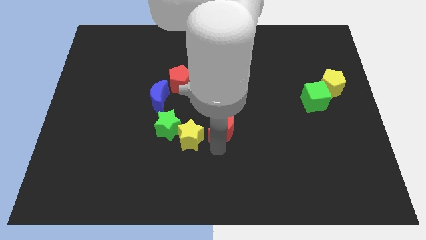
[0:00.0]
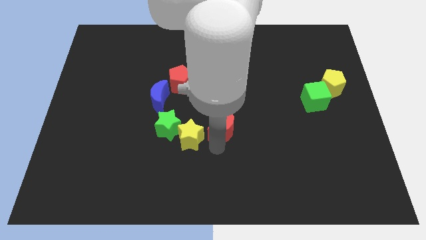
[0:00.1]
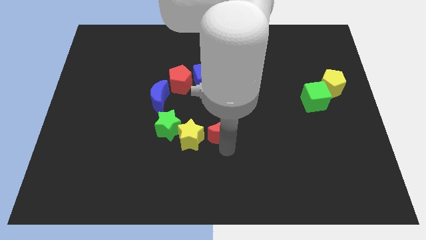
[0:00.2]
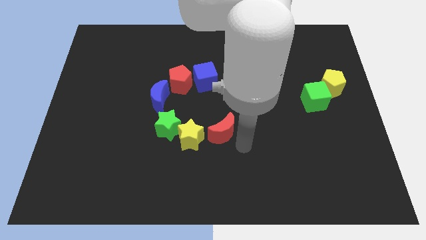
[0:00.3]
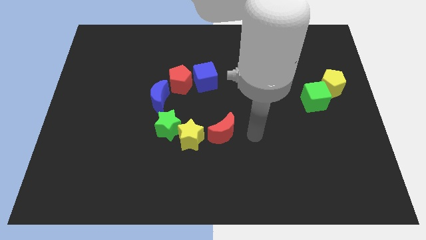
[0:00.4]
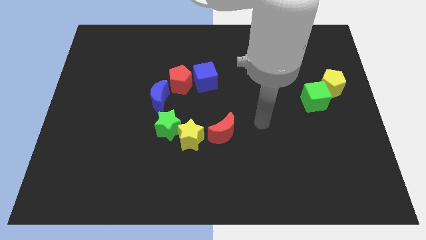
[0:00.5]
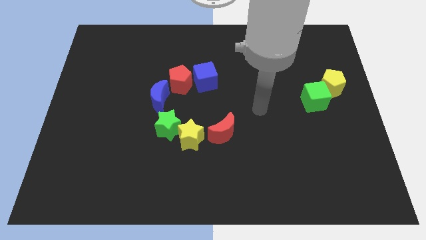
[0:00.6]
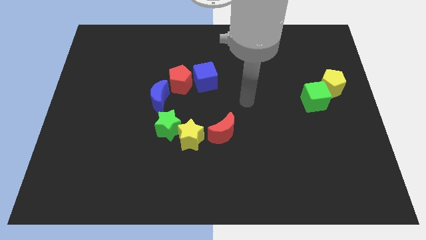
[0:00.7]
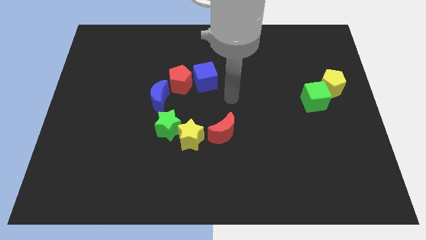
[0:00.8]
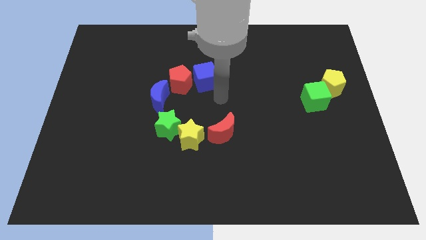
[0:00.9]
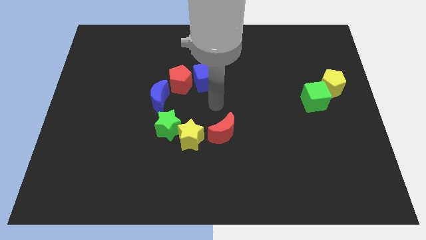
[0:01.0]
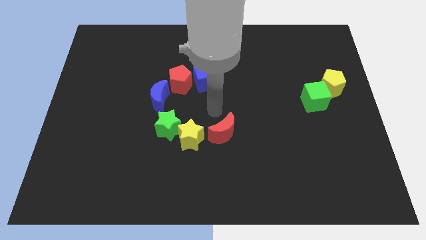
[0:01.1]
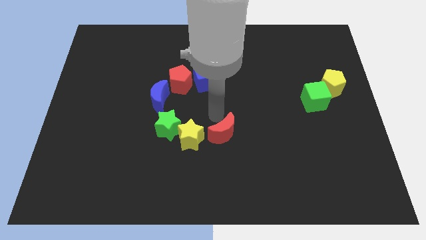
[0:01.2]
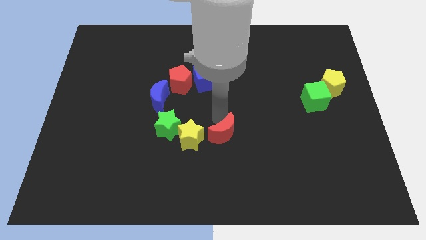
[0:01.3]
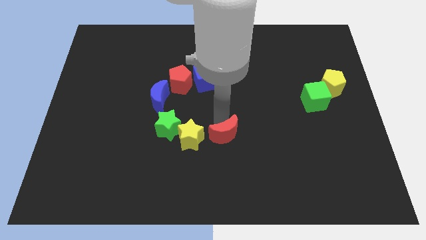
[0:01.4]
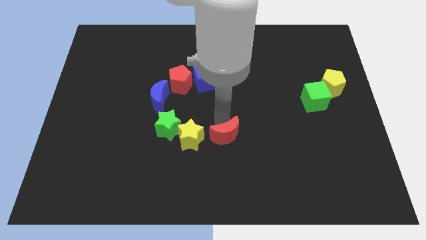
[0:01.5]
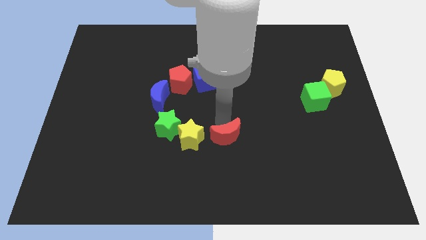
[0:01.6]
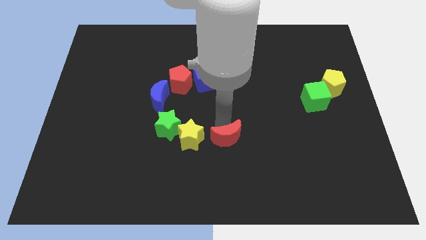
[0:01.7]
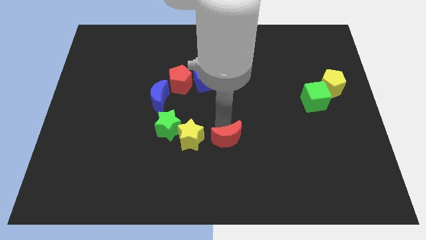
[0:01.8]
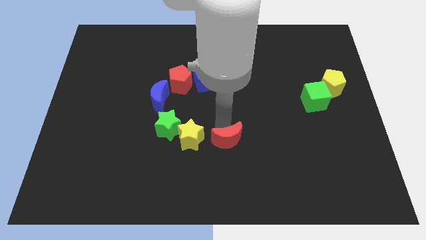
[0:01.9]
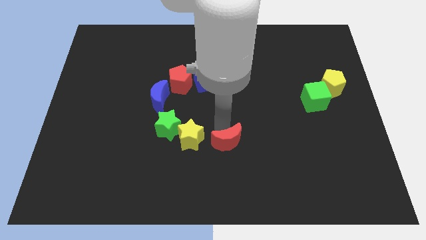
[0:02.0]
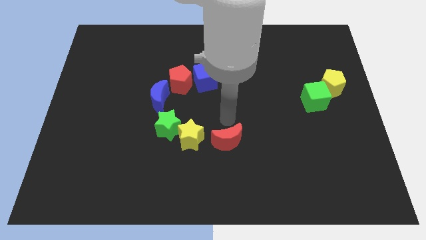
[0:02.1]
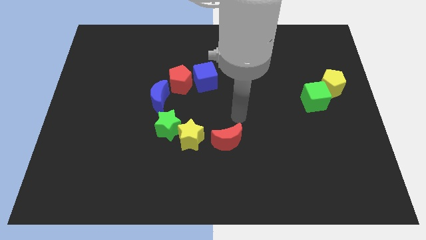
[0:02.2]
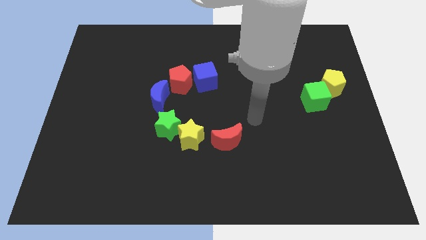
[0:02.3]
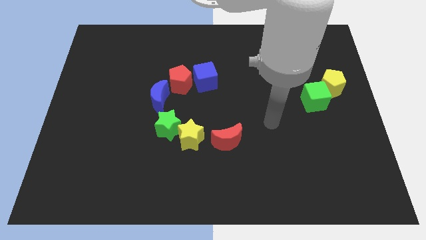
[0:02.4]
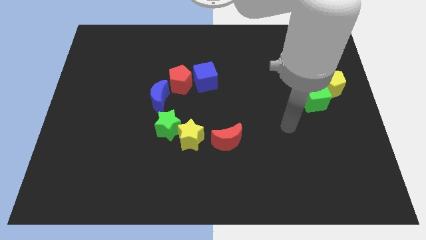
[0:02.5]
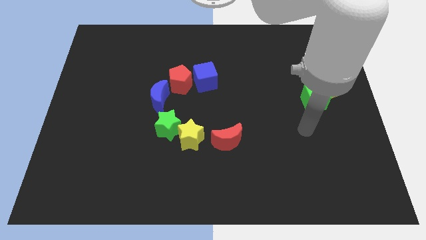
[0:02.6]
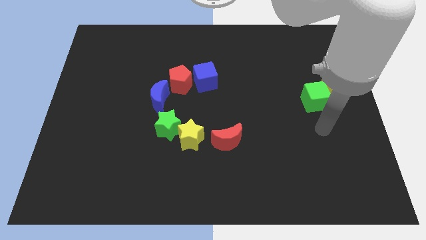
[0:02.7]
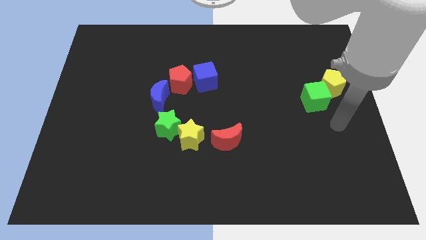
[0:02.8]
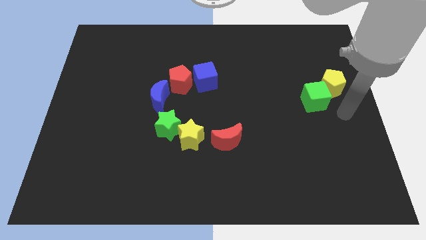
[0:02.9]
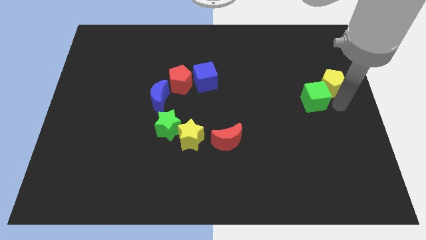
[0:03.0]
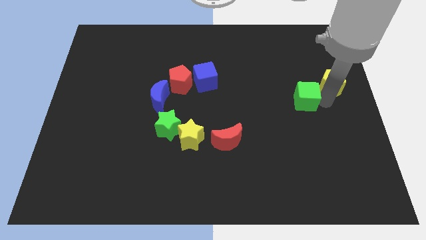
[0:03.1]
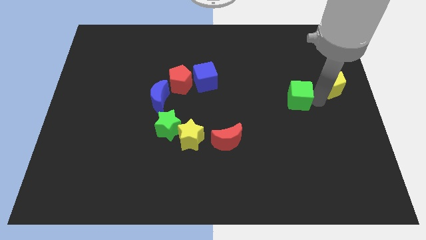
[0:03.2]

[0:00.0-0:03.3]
move the arm to the right side of the green cube

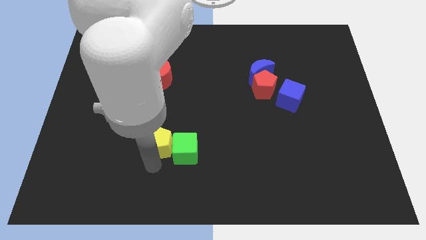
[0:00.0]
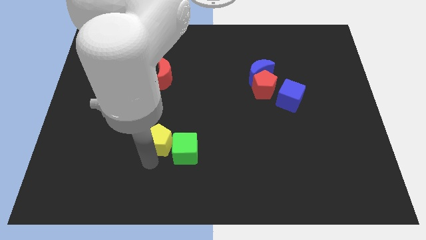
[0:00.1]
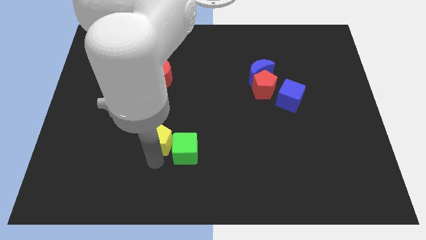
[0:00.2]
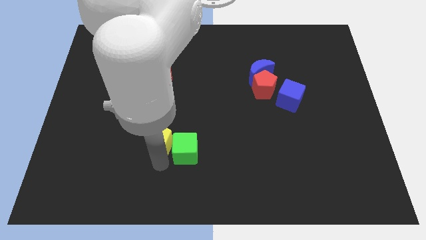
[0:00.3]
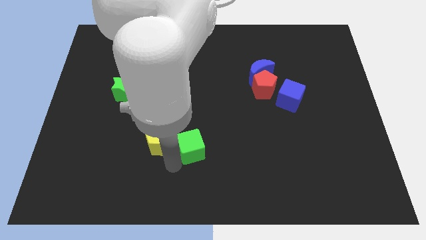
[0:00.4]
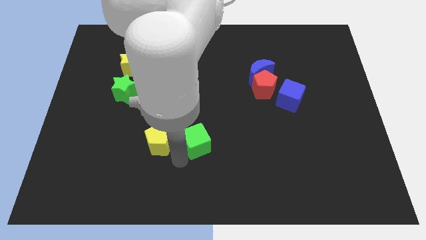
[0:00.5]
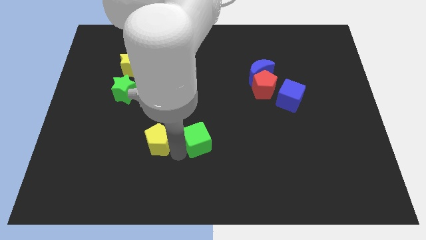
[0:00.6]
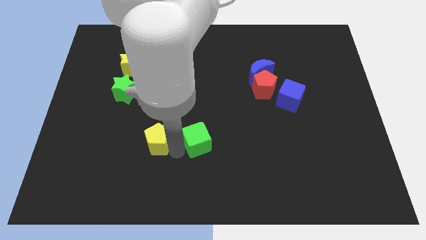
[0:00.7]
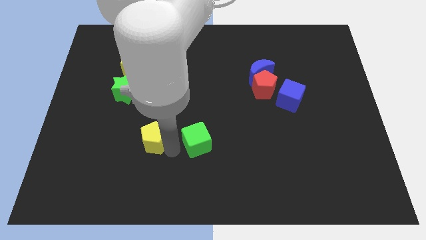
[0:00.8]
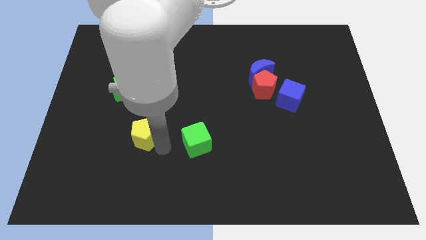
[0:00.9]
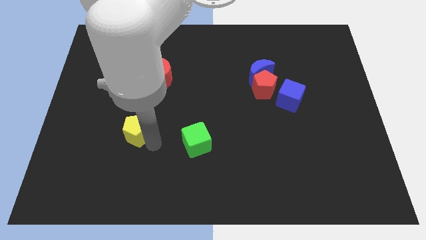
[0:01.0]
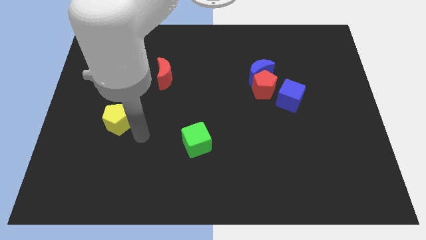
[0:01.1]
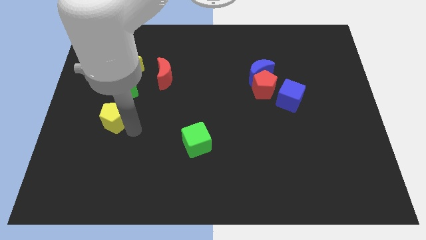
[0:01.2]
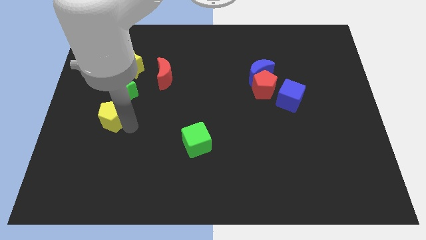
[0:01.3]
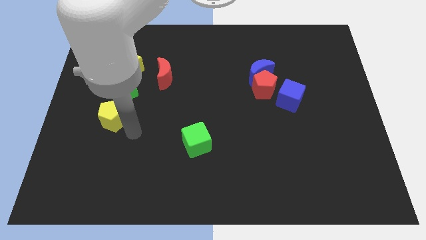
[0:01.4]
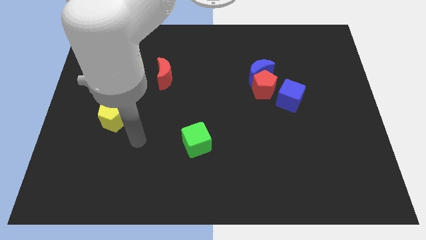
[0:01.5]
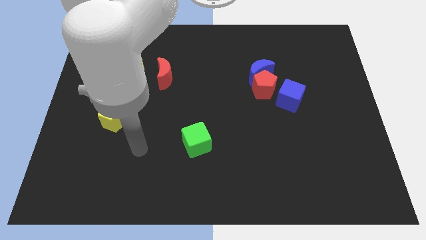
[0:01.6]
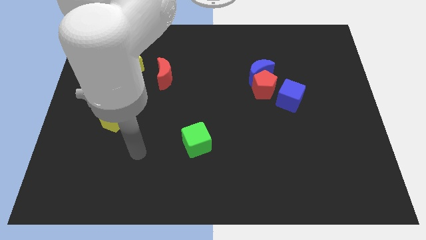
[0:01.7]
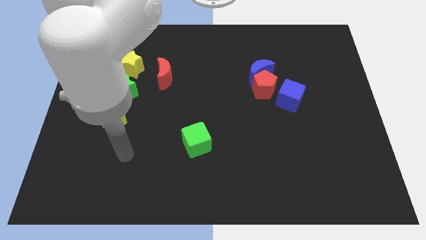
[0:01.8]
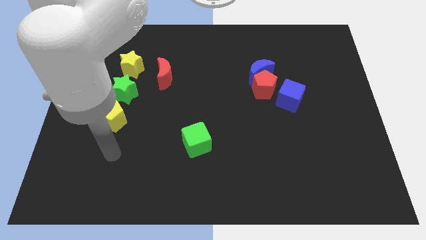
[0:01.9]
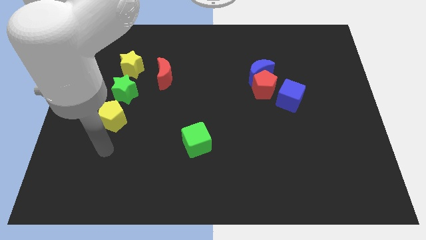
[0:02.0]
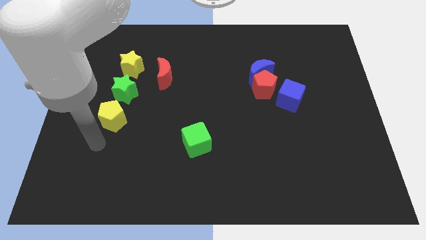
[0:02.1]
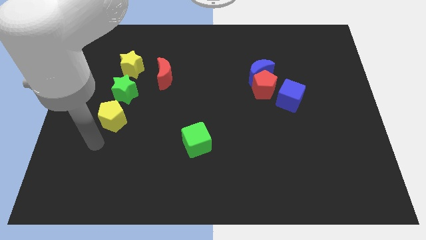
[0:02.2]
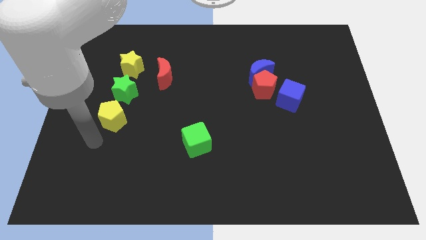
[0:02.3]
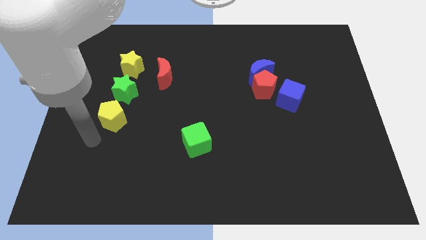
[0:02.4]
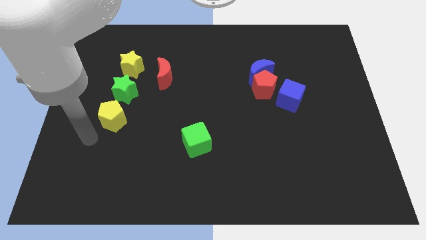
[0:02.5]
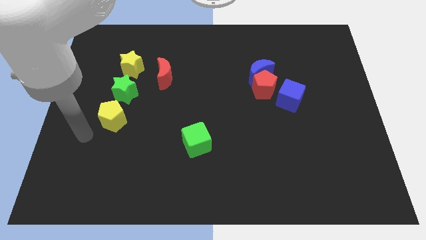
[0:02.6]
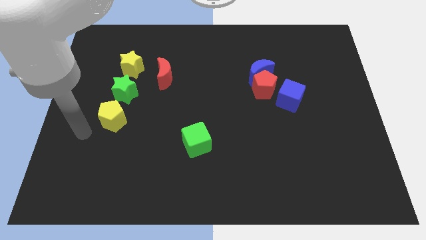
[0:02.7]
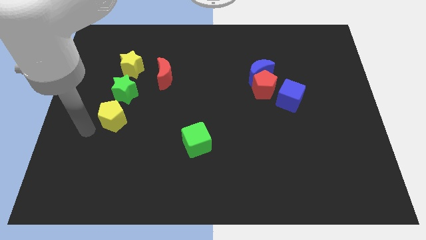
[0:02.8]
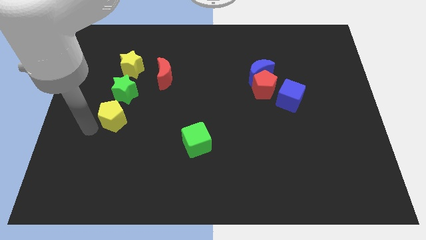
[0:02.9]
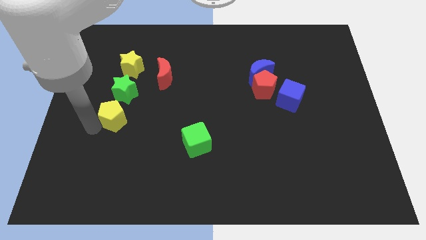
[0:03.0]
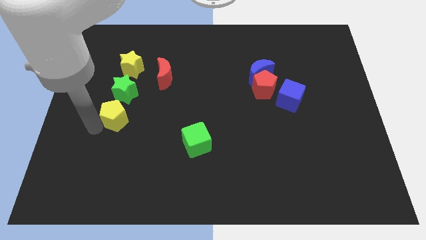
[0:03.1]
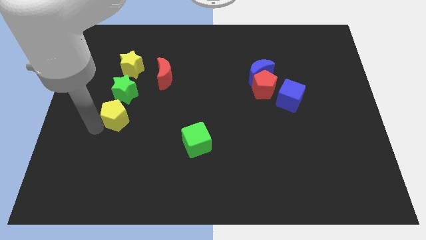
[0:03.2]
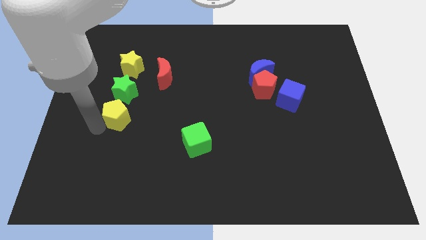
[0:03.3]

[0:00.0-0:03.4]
separate yellow pentagon from the green cube

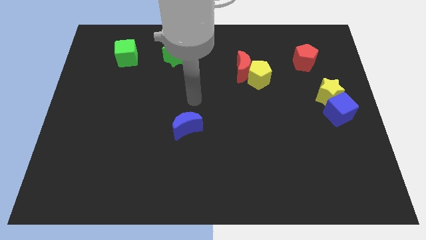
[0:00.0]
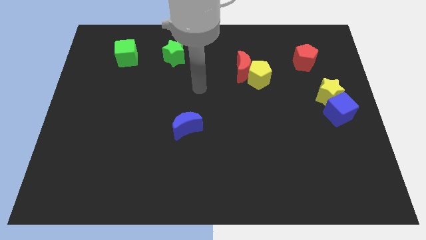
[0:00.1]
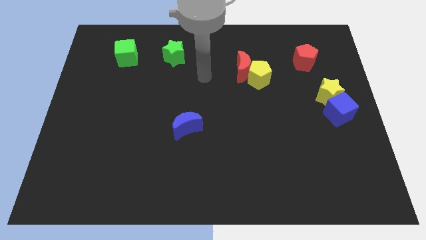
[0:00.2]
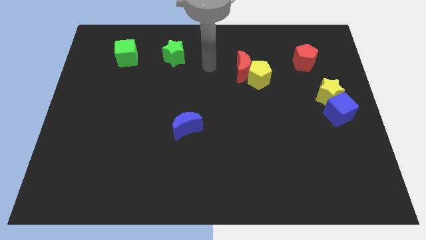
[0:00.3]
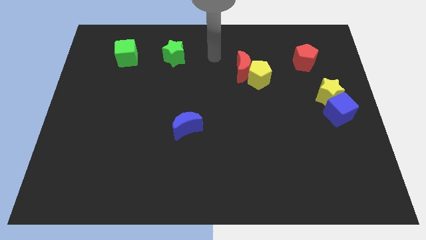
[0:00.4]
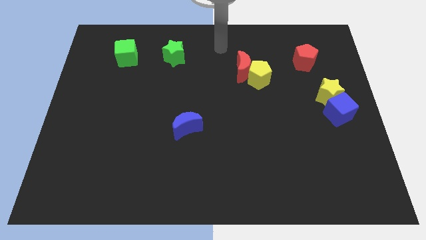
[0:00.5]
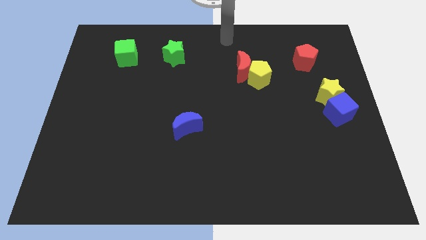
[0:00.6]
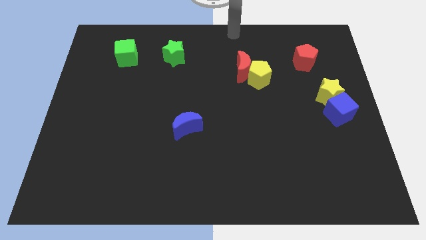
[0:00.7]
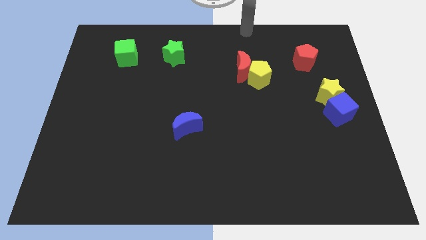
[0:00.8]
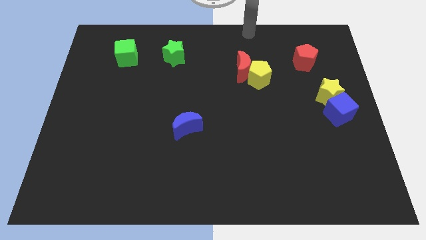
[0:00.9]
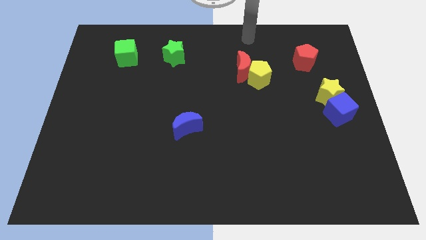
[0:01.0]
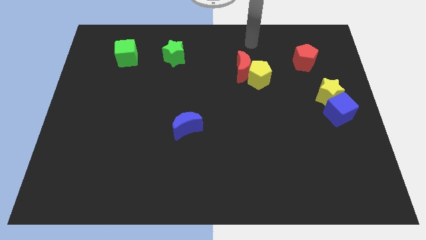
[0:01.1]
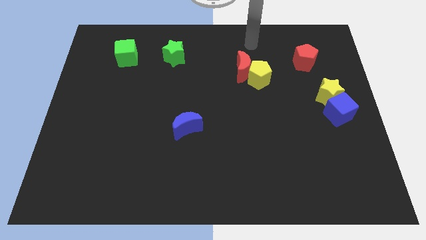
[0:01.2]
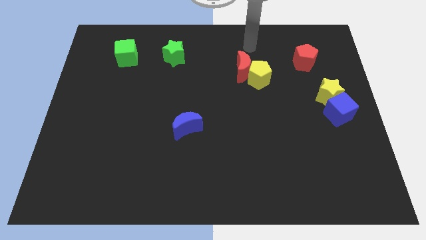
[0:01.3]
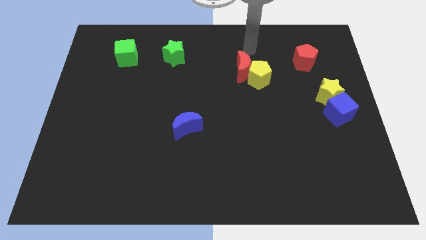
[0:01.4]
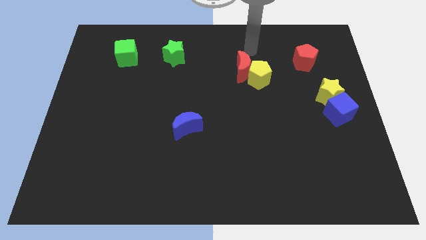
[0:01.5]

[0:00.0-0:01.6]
point the arm at the top of the red crescent

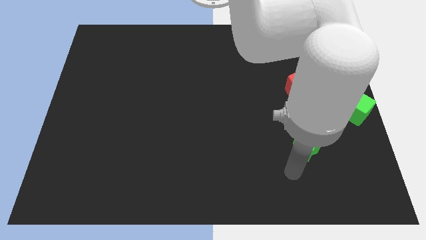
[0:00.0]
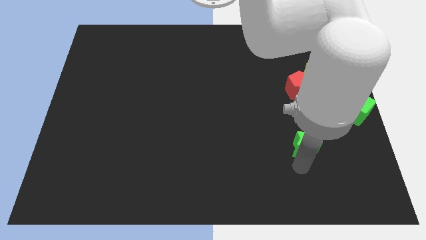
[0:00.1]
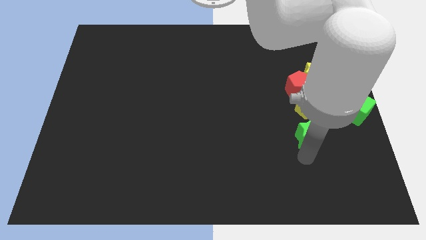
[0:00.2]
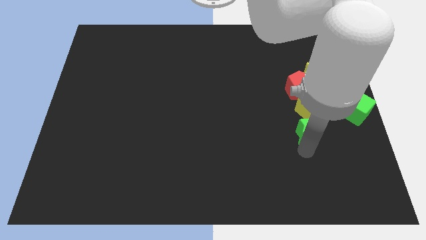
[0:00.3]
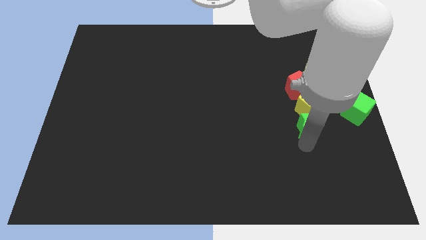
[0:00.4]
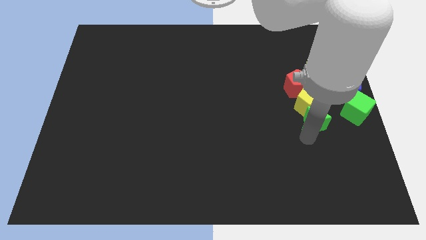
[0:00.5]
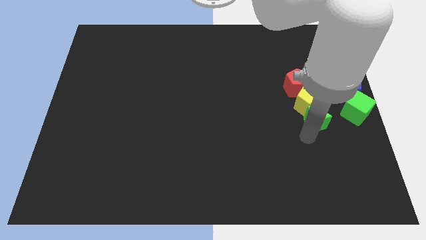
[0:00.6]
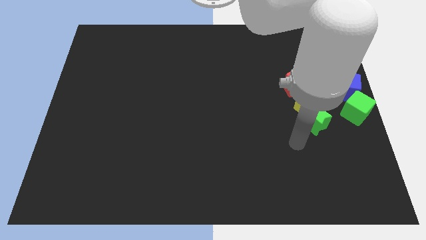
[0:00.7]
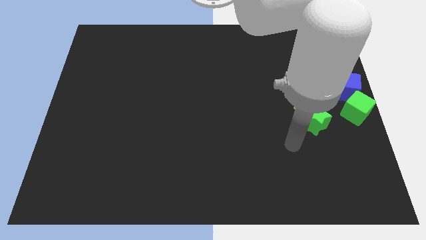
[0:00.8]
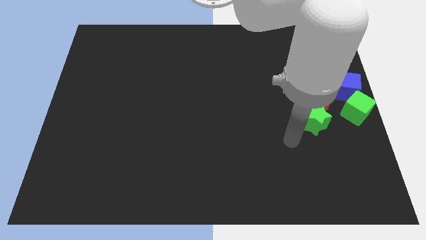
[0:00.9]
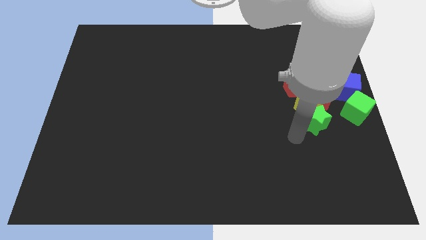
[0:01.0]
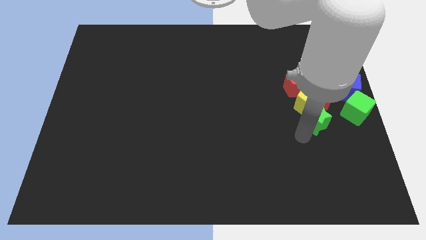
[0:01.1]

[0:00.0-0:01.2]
place green star towards yellow pentagon
